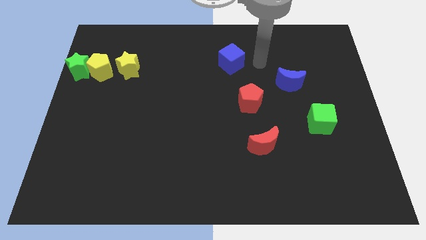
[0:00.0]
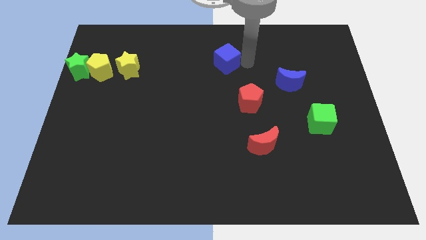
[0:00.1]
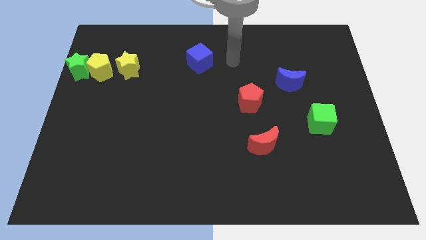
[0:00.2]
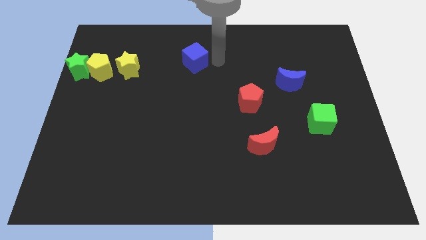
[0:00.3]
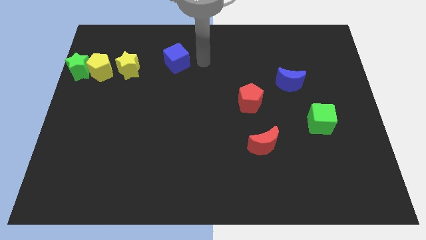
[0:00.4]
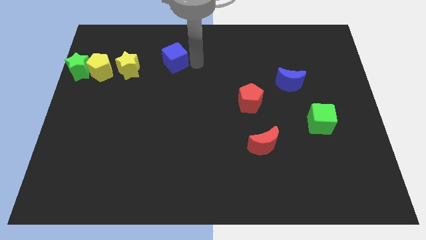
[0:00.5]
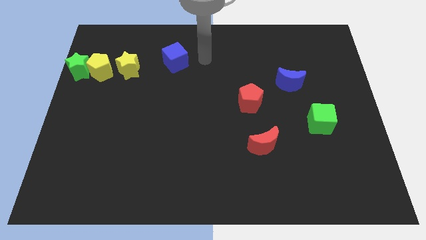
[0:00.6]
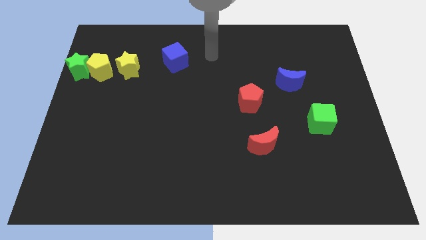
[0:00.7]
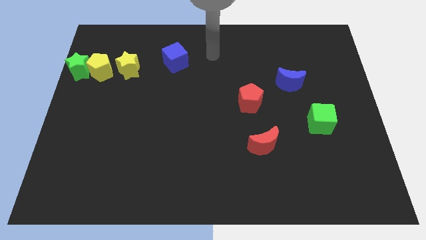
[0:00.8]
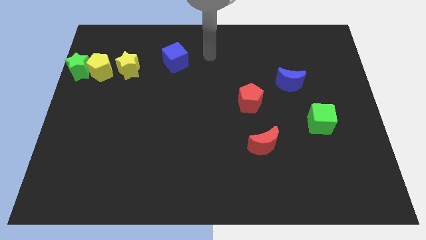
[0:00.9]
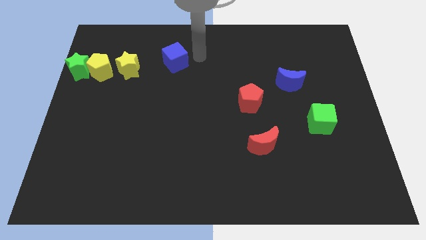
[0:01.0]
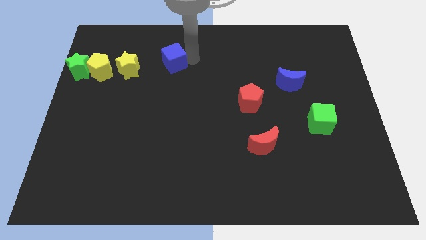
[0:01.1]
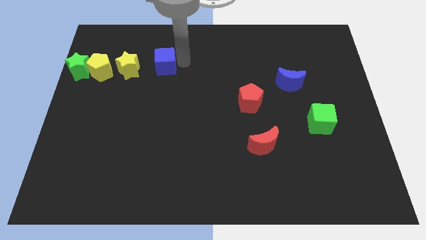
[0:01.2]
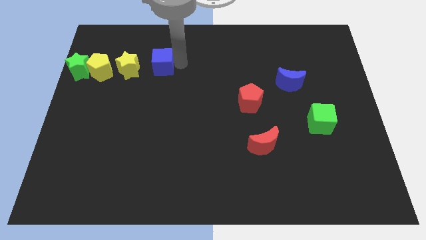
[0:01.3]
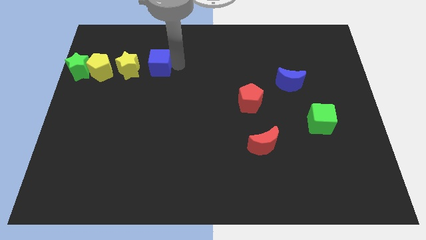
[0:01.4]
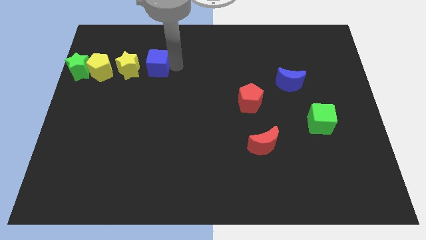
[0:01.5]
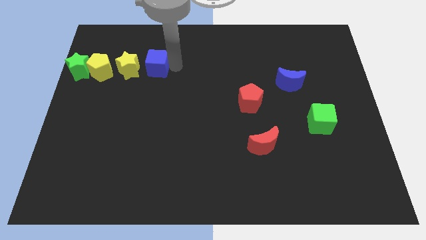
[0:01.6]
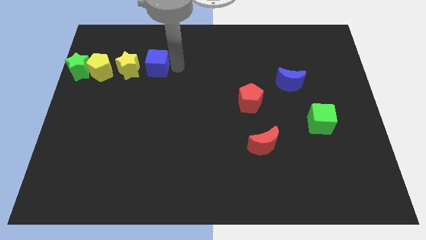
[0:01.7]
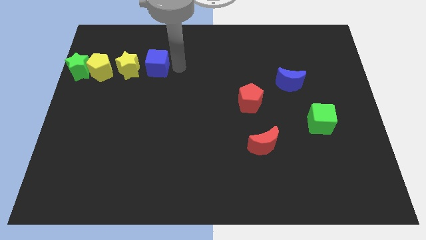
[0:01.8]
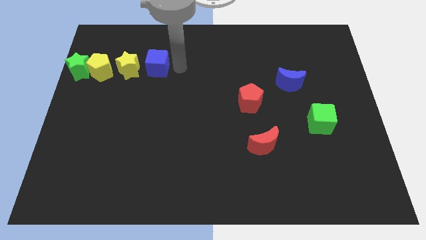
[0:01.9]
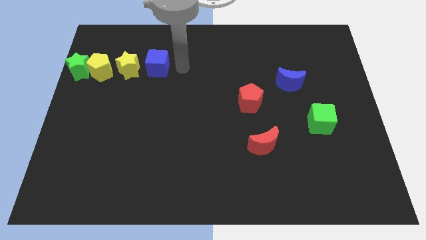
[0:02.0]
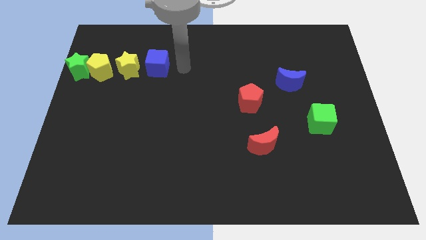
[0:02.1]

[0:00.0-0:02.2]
push the blue cube to the right side of the yellow star

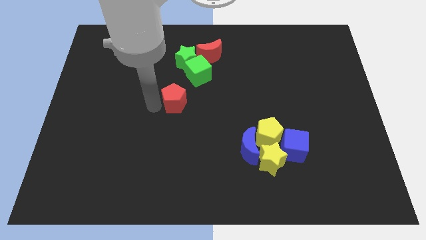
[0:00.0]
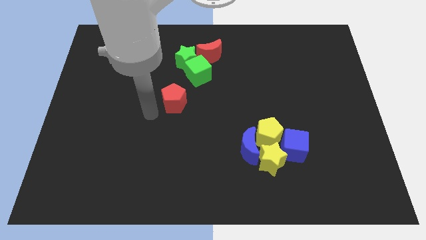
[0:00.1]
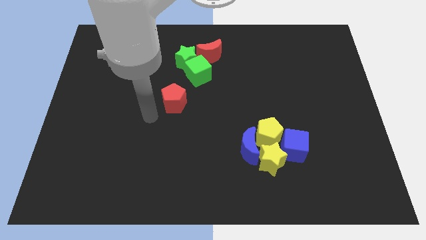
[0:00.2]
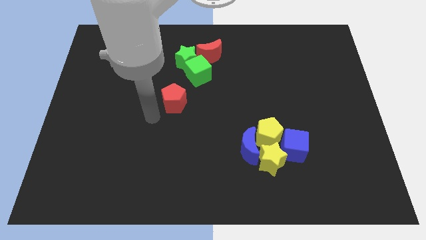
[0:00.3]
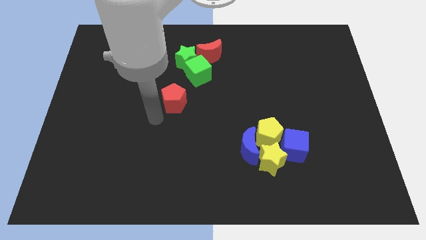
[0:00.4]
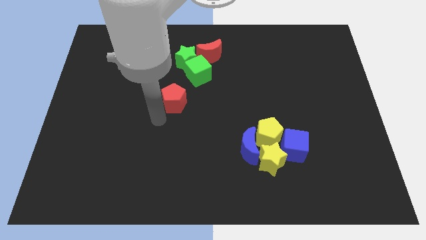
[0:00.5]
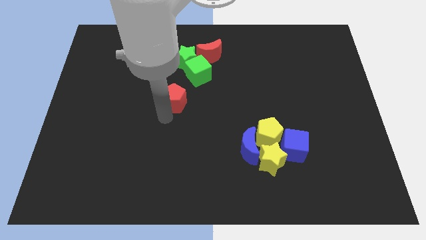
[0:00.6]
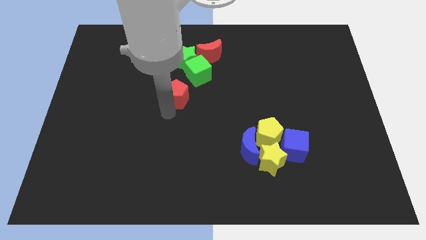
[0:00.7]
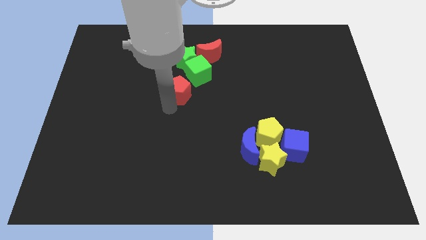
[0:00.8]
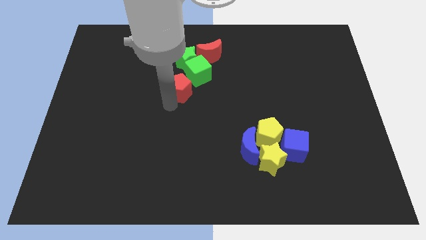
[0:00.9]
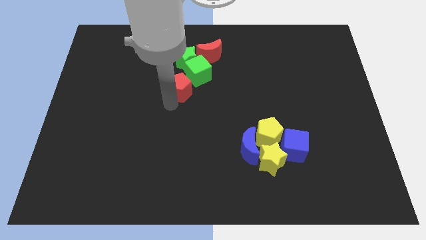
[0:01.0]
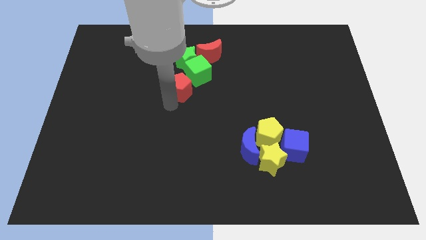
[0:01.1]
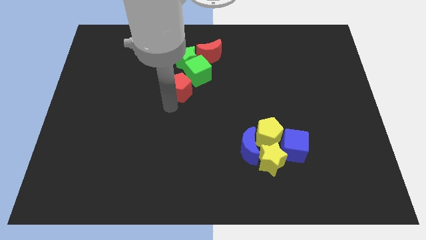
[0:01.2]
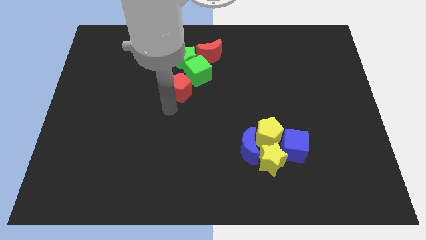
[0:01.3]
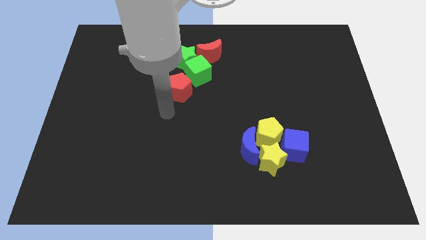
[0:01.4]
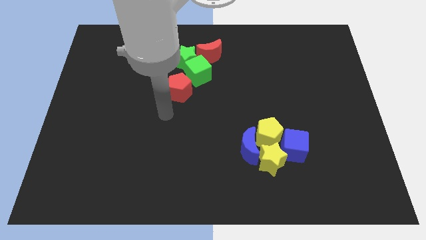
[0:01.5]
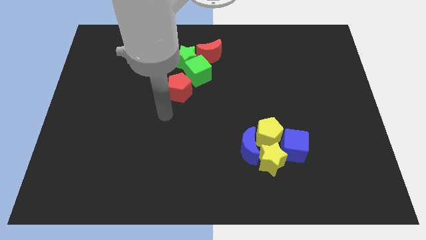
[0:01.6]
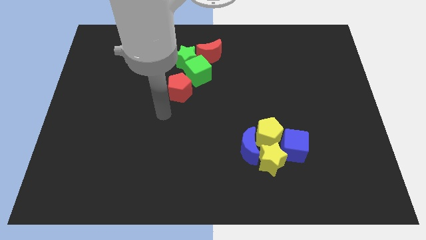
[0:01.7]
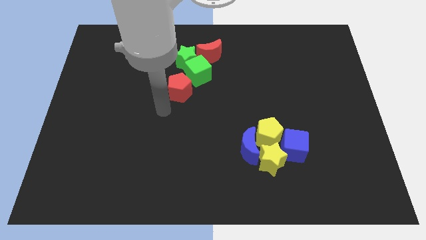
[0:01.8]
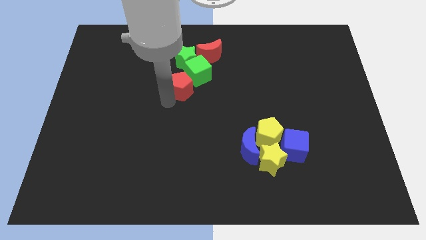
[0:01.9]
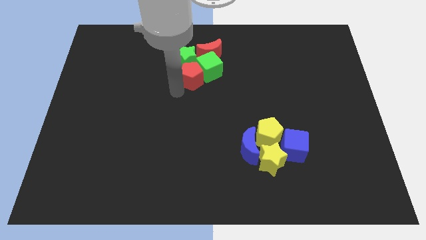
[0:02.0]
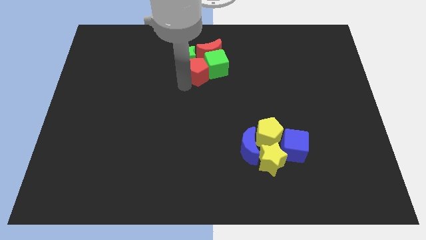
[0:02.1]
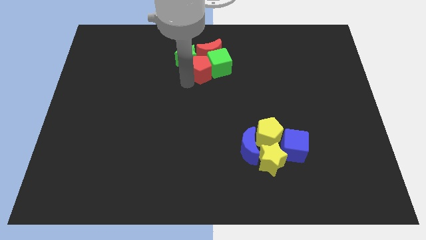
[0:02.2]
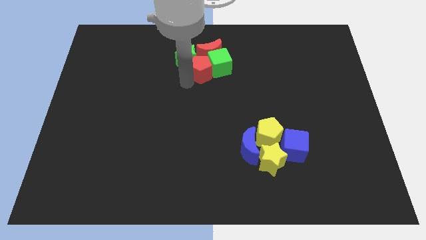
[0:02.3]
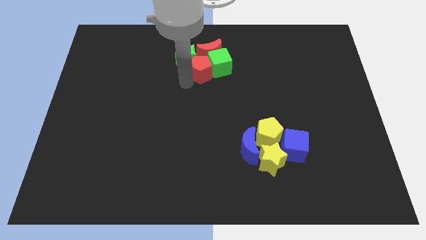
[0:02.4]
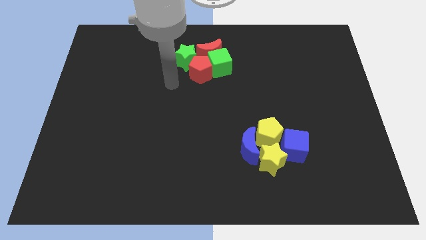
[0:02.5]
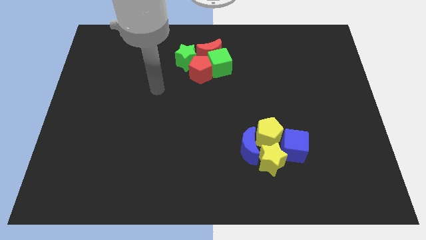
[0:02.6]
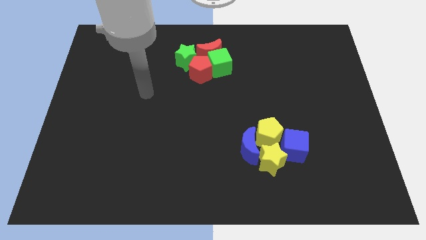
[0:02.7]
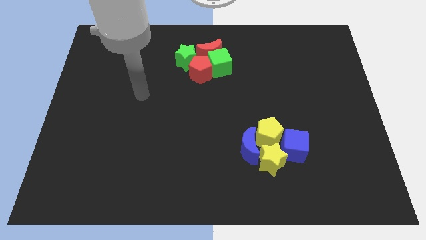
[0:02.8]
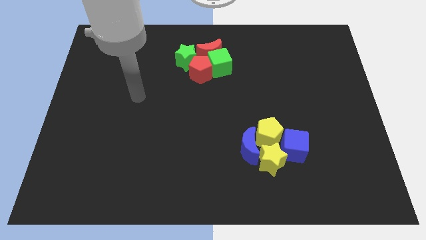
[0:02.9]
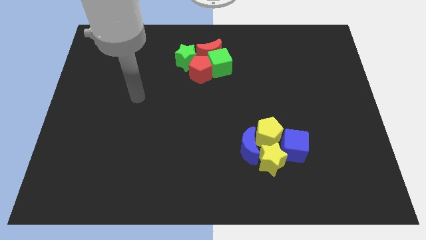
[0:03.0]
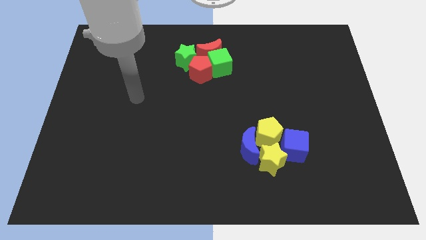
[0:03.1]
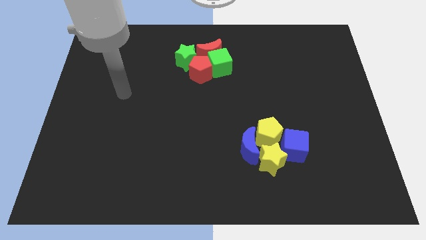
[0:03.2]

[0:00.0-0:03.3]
slide the red pentagon into the group of blocks

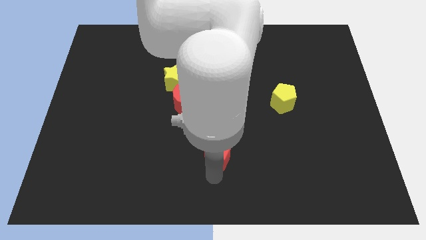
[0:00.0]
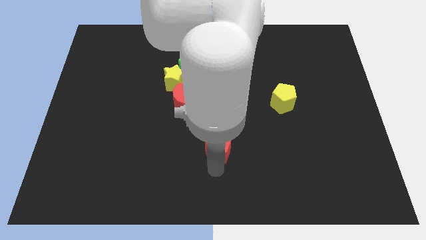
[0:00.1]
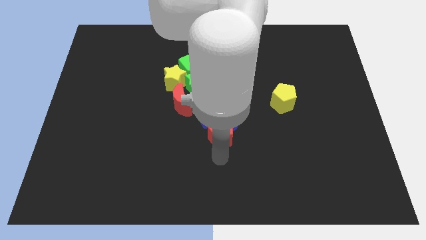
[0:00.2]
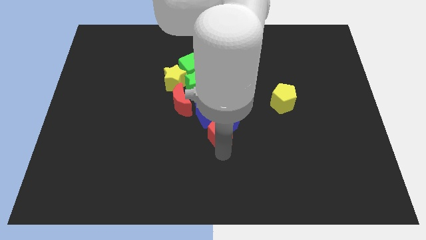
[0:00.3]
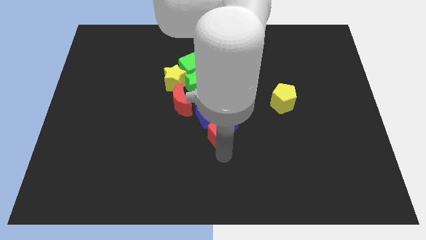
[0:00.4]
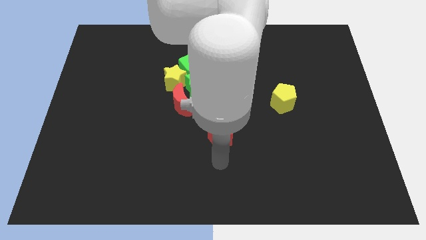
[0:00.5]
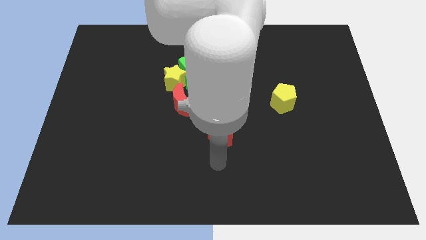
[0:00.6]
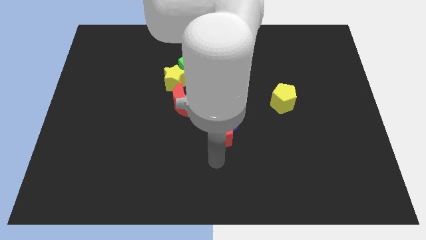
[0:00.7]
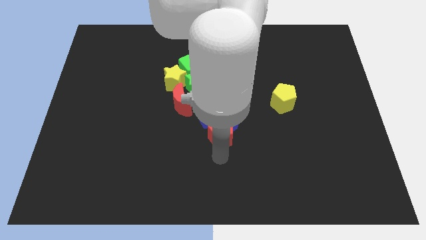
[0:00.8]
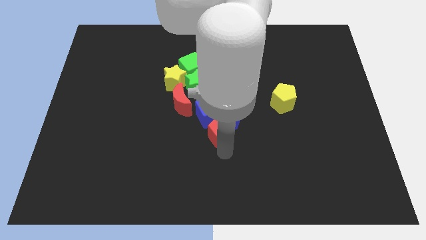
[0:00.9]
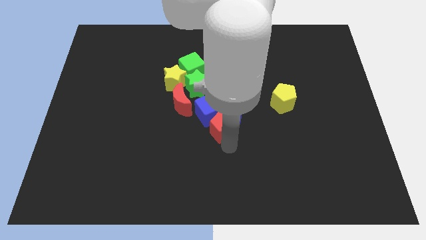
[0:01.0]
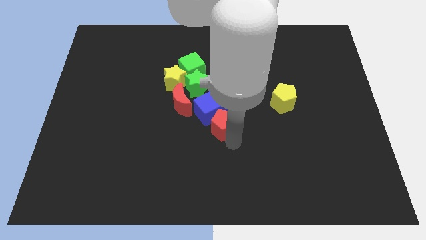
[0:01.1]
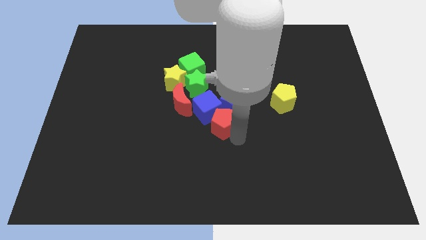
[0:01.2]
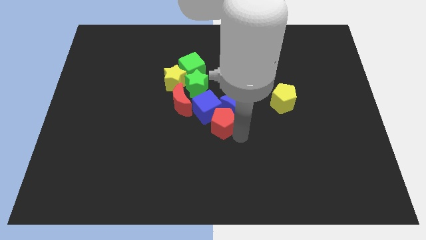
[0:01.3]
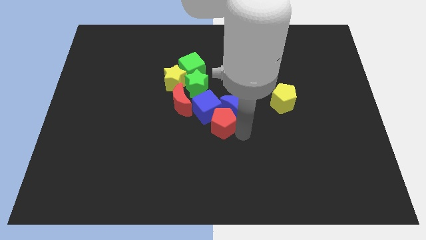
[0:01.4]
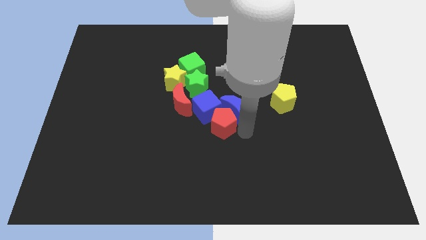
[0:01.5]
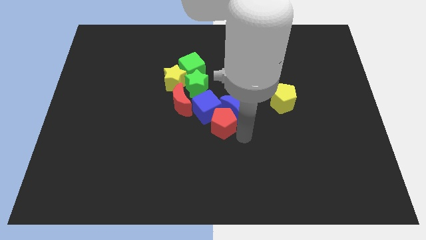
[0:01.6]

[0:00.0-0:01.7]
push the red pentagon into the blue cube and blue moon

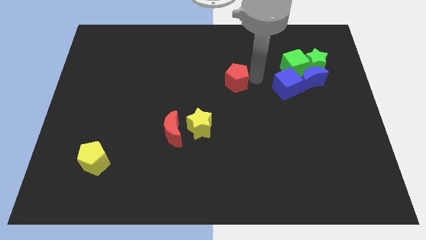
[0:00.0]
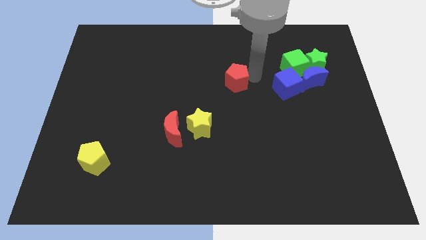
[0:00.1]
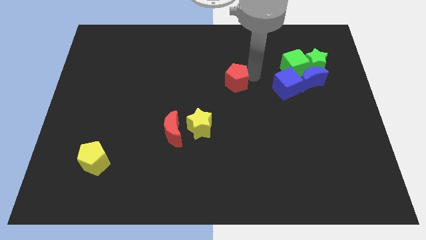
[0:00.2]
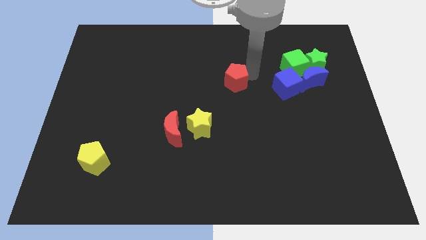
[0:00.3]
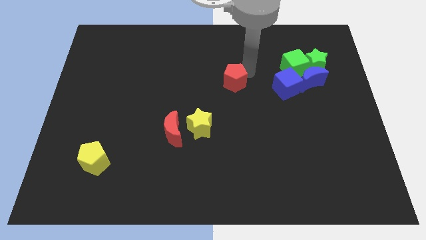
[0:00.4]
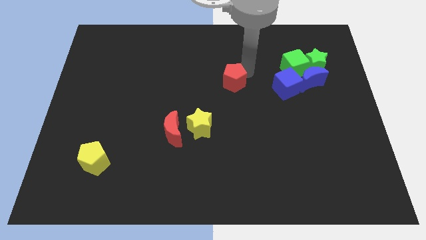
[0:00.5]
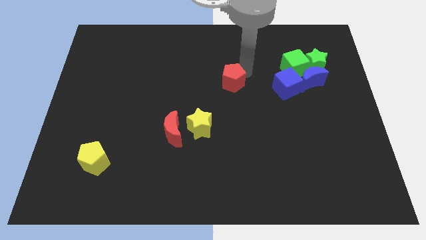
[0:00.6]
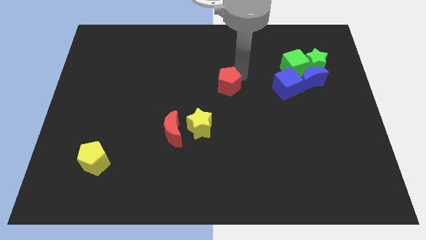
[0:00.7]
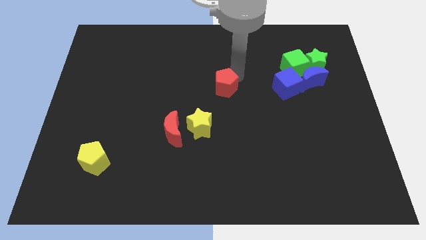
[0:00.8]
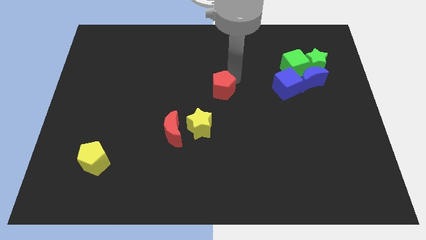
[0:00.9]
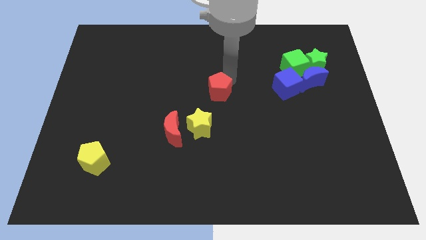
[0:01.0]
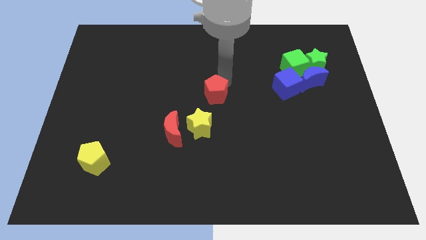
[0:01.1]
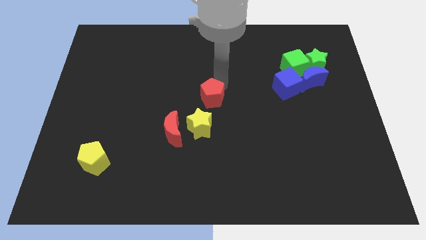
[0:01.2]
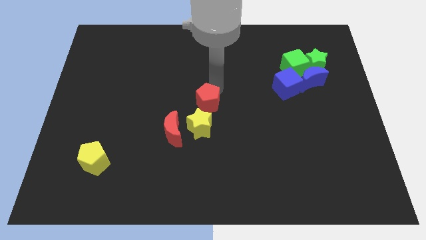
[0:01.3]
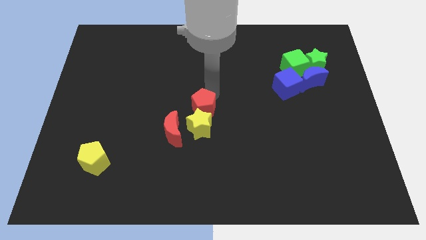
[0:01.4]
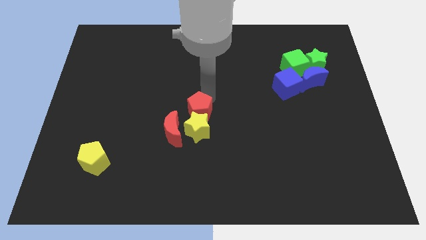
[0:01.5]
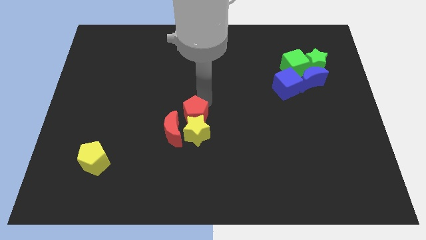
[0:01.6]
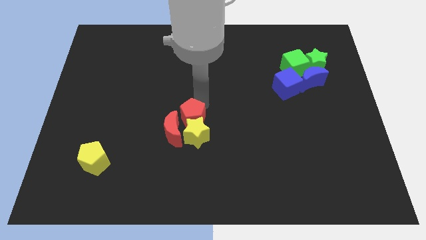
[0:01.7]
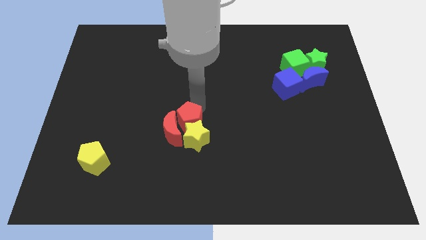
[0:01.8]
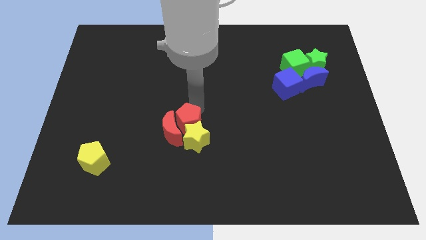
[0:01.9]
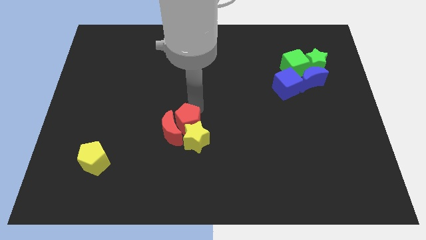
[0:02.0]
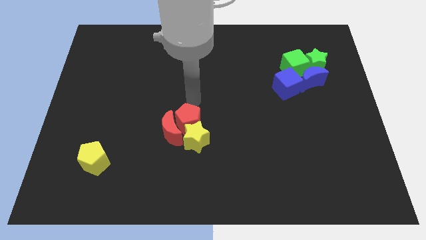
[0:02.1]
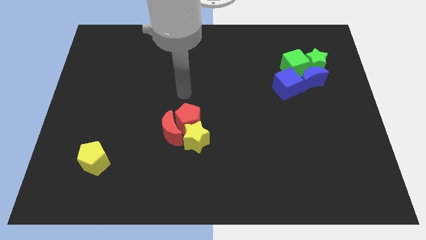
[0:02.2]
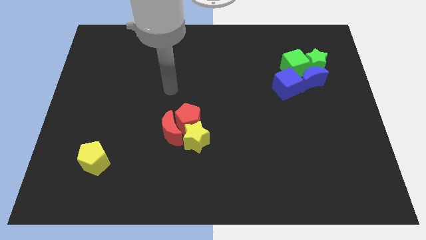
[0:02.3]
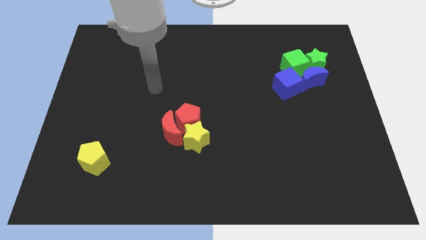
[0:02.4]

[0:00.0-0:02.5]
move the red pentagon into the red crescent
